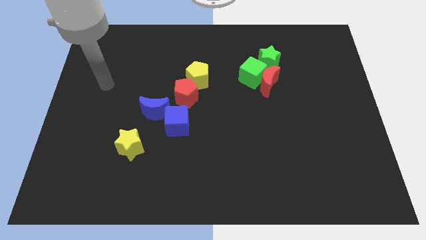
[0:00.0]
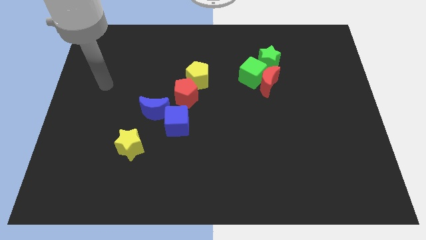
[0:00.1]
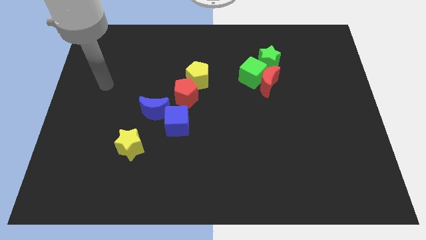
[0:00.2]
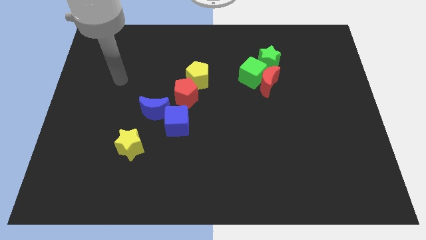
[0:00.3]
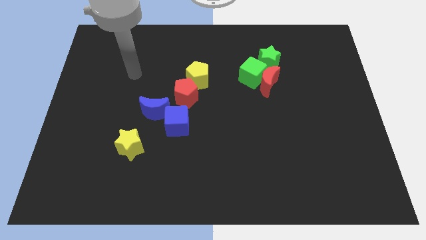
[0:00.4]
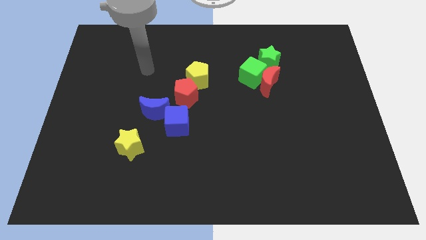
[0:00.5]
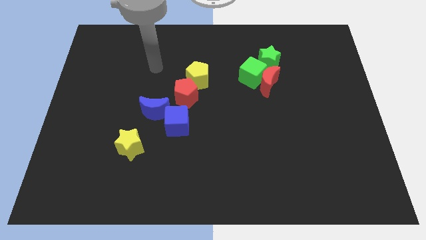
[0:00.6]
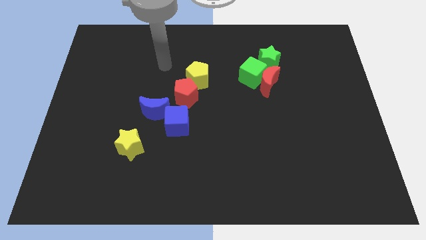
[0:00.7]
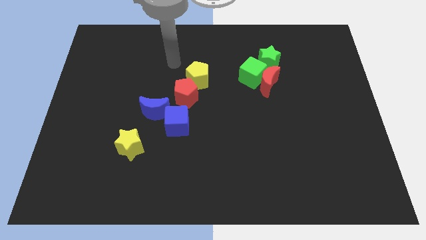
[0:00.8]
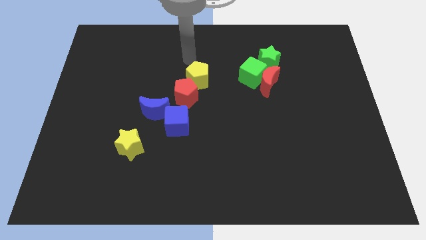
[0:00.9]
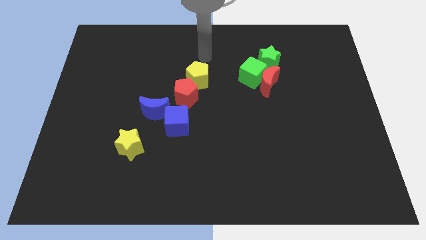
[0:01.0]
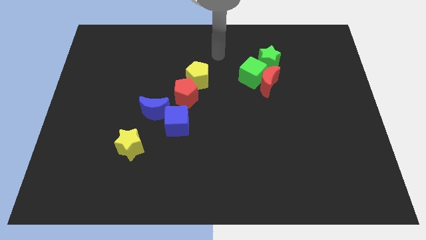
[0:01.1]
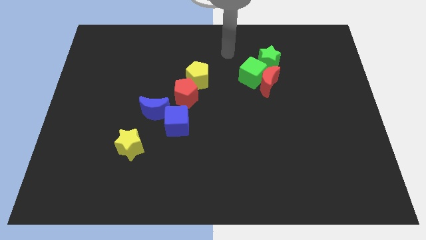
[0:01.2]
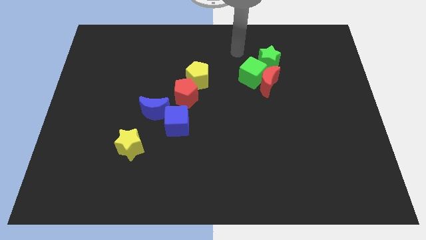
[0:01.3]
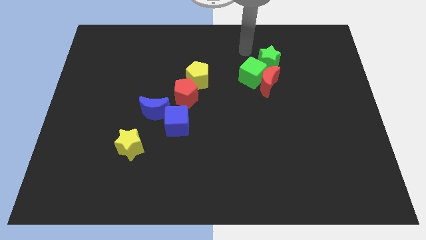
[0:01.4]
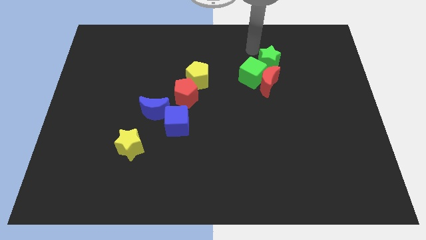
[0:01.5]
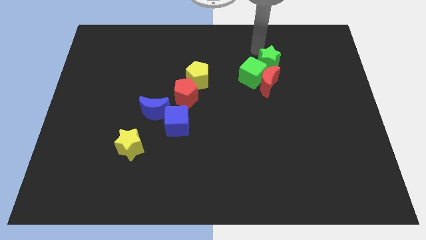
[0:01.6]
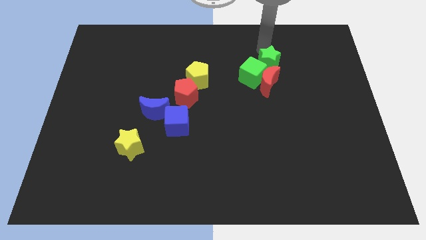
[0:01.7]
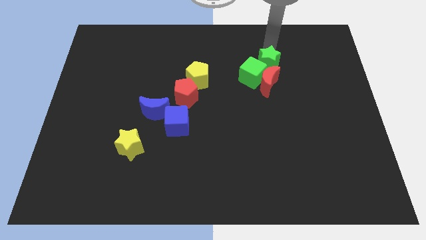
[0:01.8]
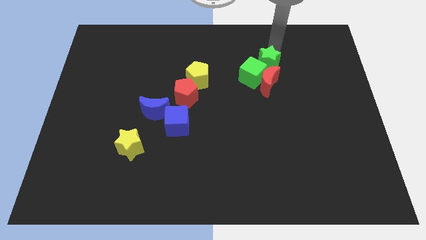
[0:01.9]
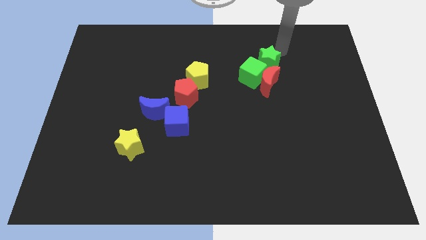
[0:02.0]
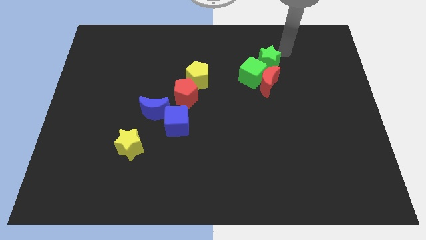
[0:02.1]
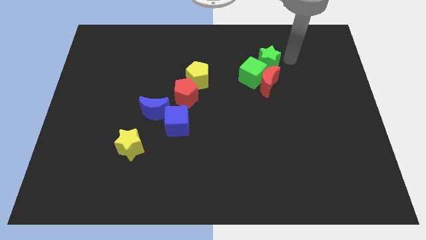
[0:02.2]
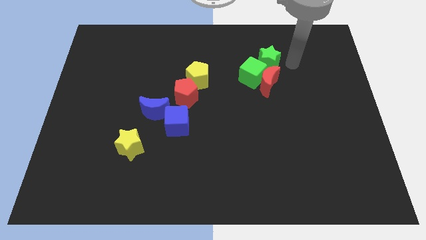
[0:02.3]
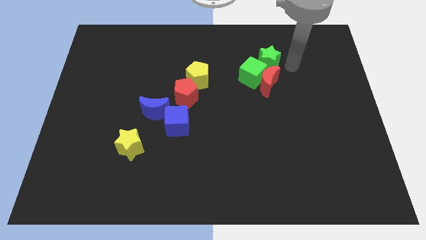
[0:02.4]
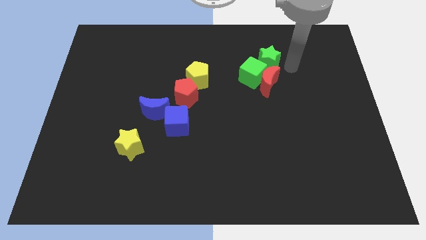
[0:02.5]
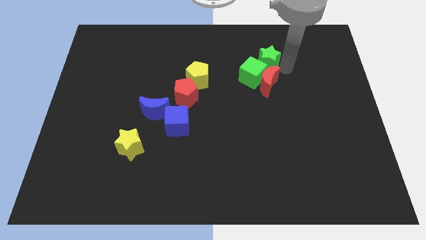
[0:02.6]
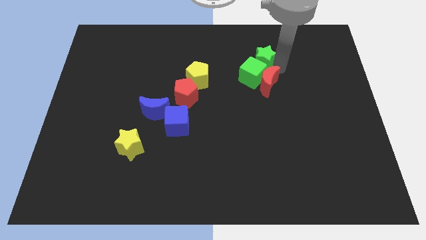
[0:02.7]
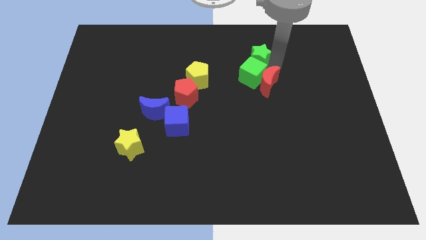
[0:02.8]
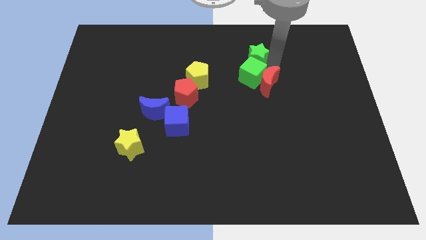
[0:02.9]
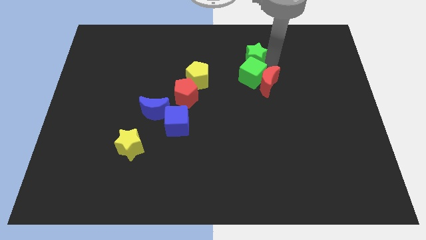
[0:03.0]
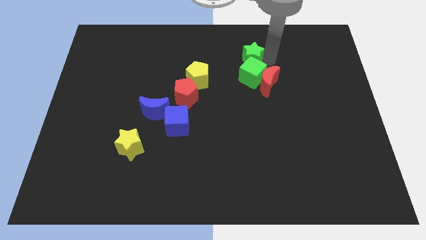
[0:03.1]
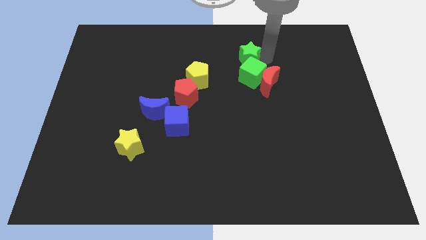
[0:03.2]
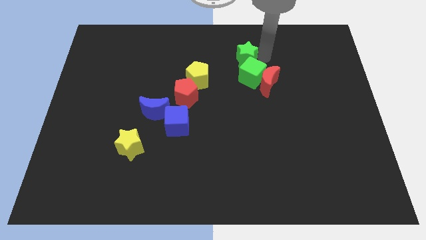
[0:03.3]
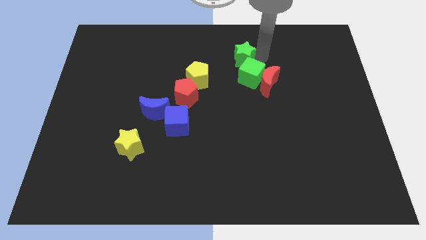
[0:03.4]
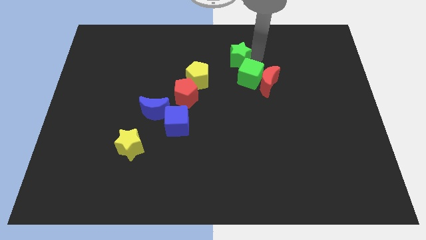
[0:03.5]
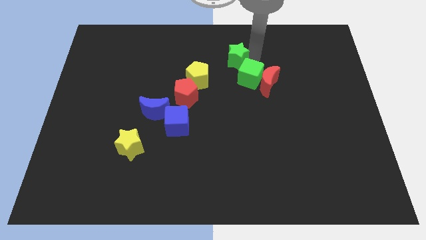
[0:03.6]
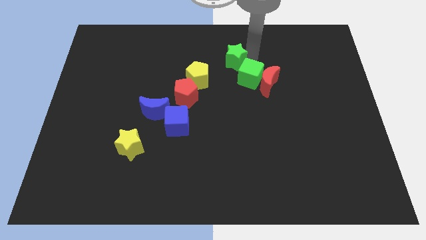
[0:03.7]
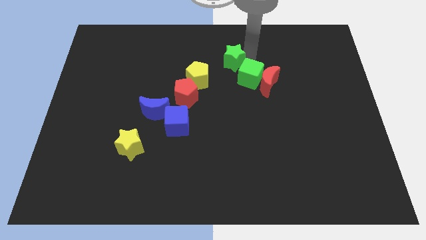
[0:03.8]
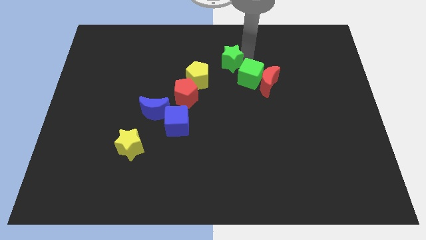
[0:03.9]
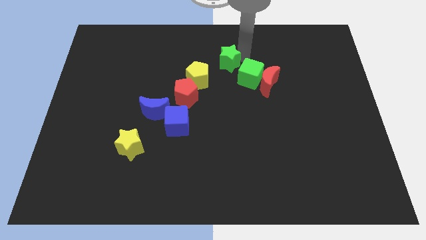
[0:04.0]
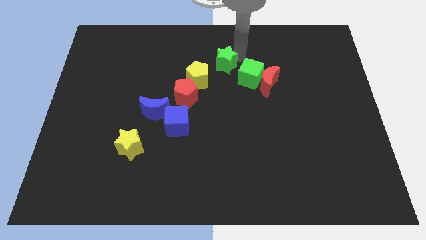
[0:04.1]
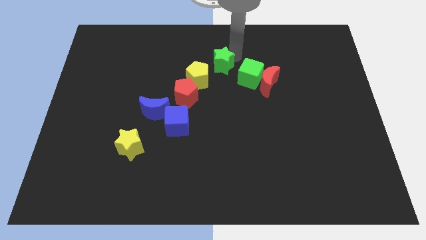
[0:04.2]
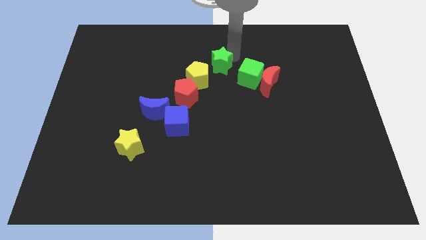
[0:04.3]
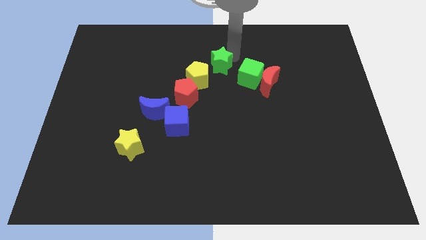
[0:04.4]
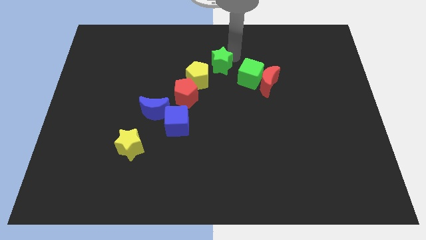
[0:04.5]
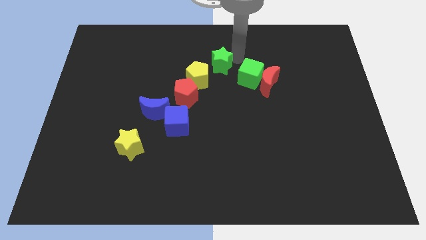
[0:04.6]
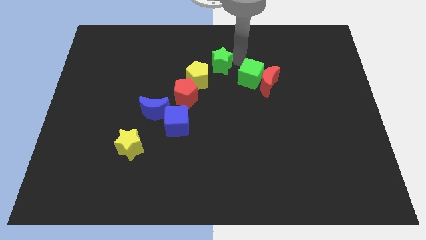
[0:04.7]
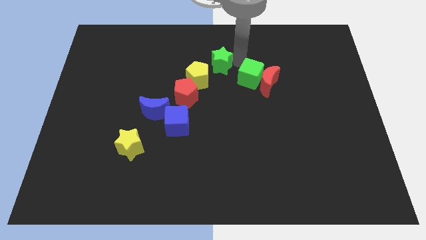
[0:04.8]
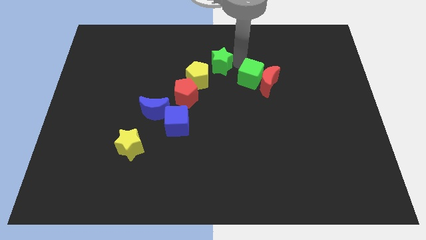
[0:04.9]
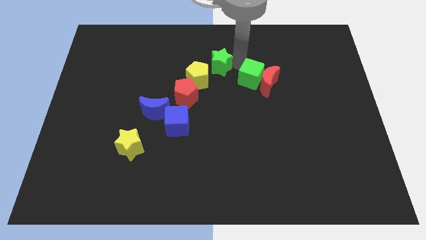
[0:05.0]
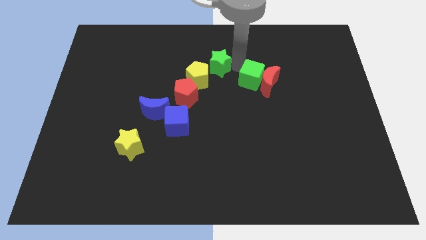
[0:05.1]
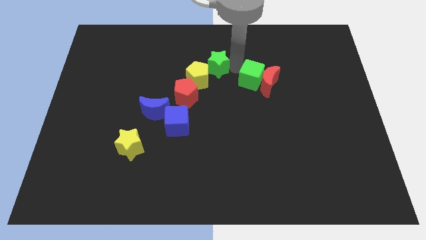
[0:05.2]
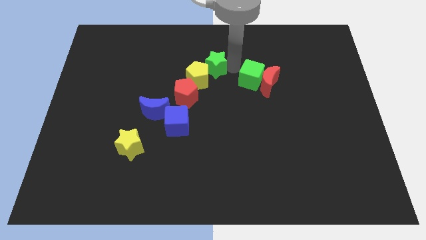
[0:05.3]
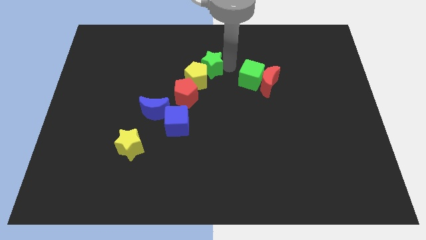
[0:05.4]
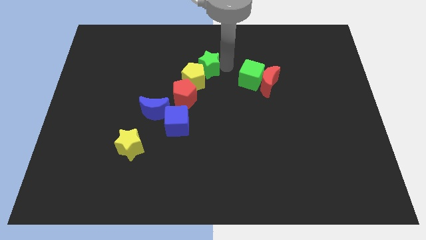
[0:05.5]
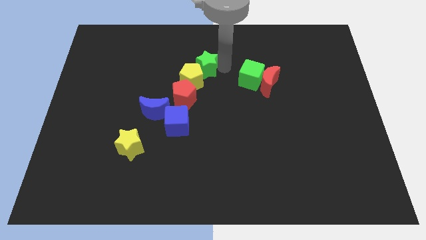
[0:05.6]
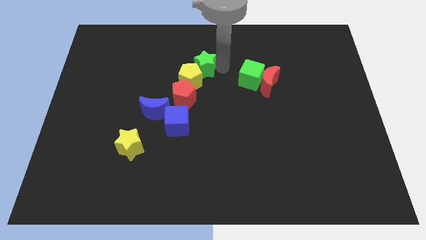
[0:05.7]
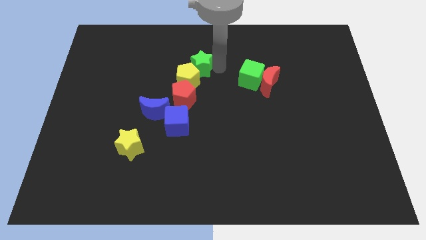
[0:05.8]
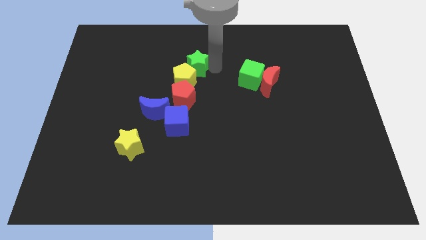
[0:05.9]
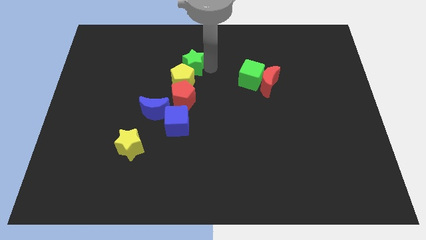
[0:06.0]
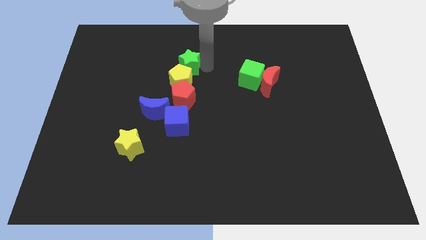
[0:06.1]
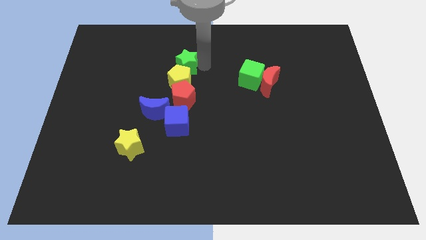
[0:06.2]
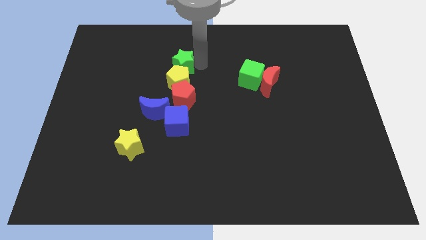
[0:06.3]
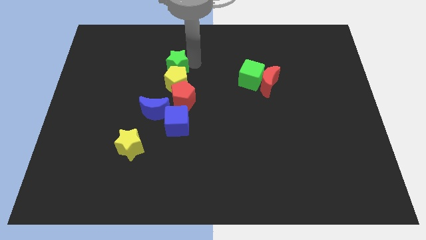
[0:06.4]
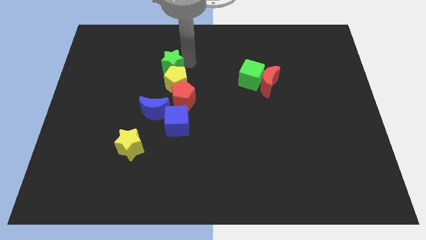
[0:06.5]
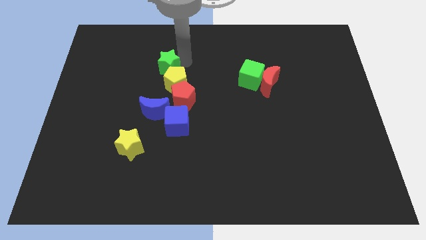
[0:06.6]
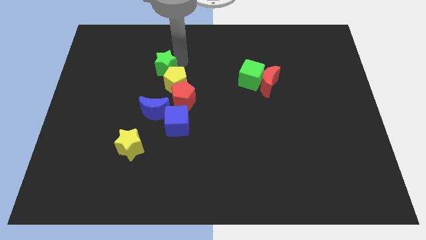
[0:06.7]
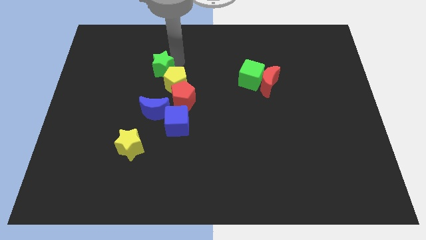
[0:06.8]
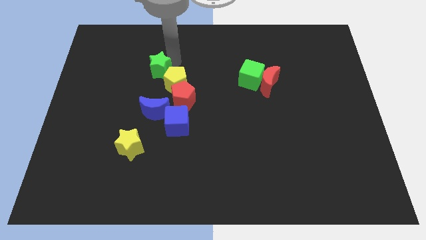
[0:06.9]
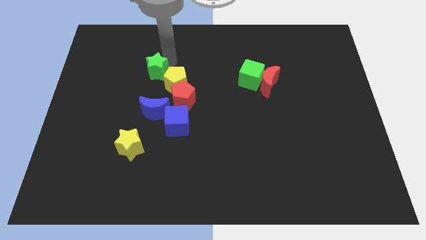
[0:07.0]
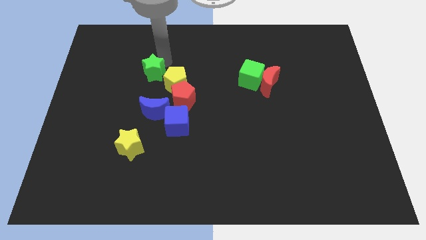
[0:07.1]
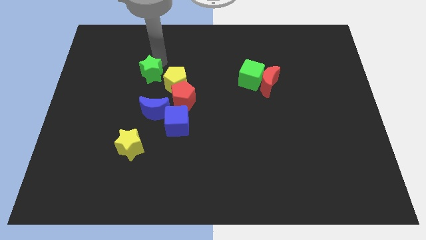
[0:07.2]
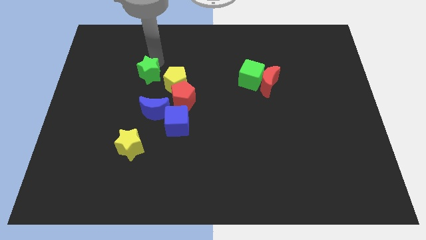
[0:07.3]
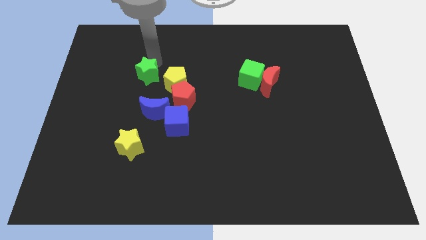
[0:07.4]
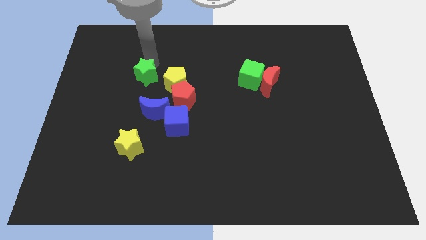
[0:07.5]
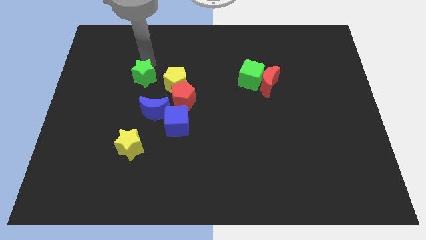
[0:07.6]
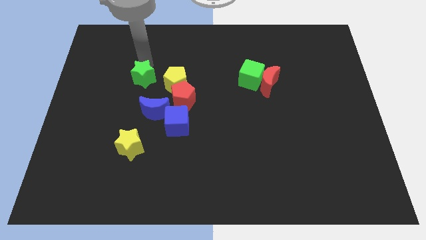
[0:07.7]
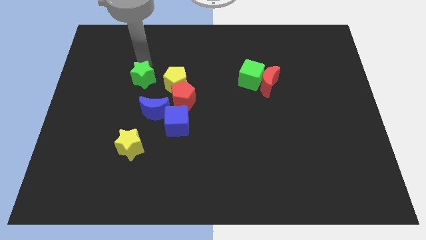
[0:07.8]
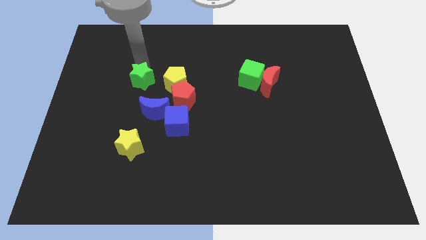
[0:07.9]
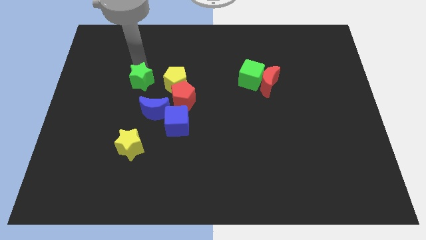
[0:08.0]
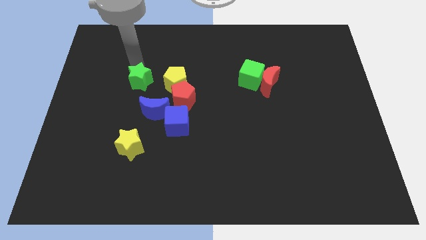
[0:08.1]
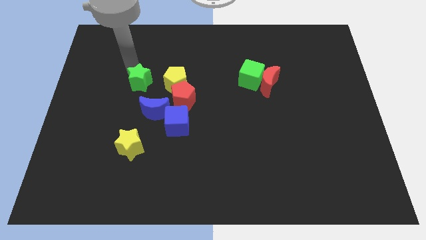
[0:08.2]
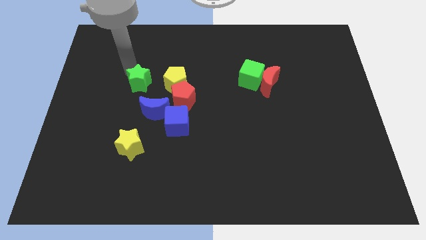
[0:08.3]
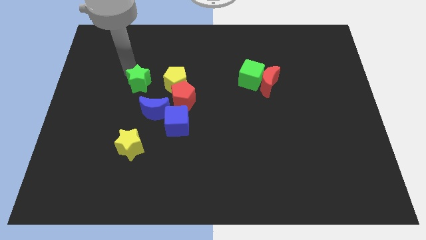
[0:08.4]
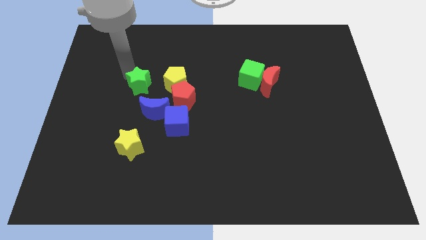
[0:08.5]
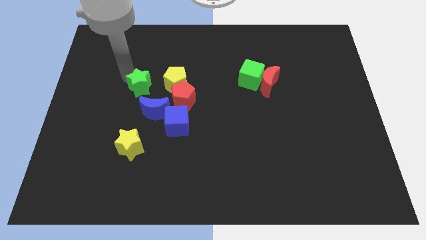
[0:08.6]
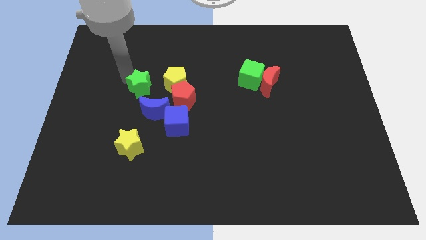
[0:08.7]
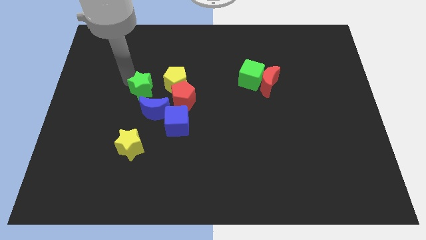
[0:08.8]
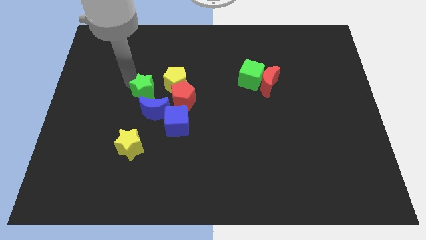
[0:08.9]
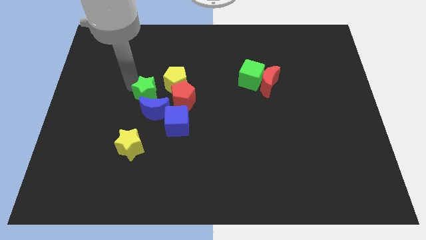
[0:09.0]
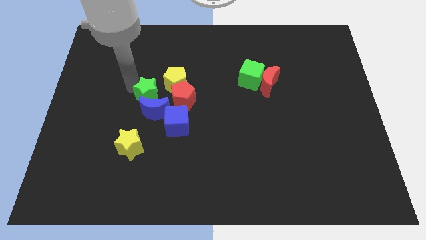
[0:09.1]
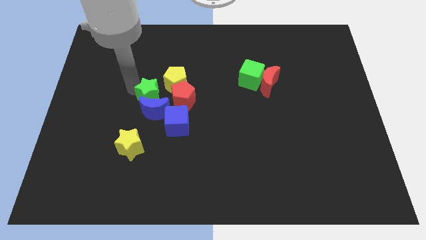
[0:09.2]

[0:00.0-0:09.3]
push the green star to the blue moon
